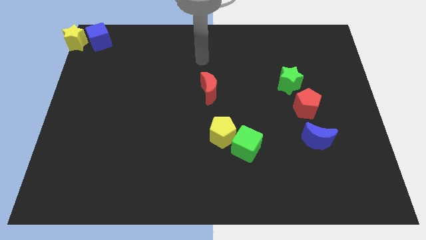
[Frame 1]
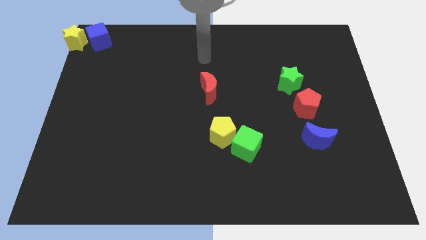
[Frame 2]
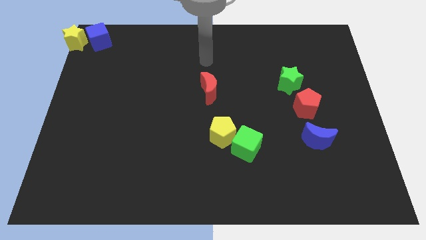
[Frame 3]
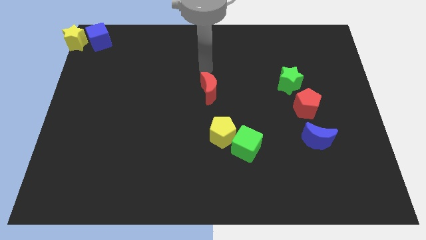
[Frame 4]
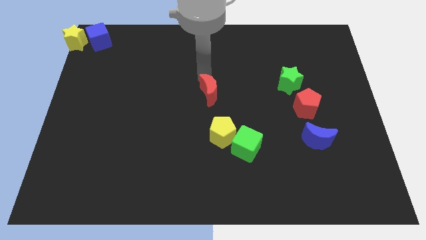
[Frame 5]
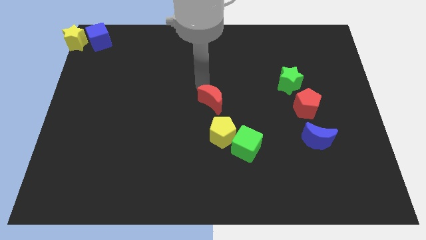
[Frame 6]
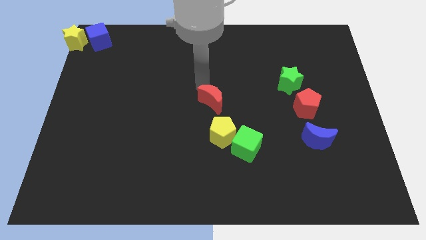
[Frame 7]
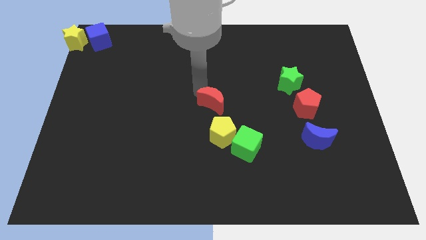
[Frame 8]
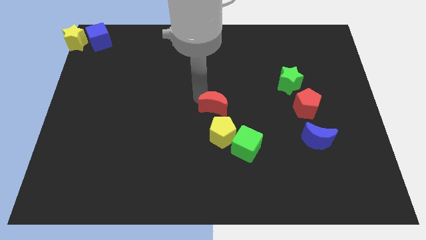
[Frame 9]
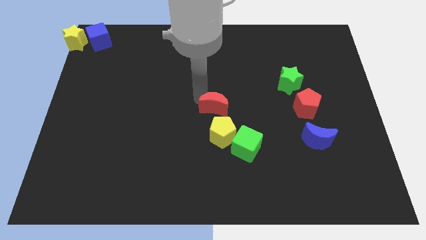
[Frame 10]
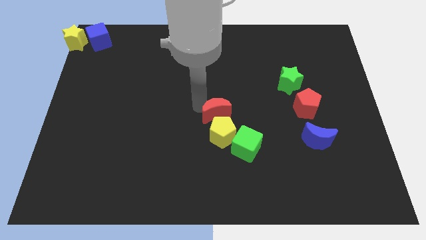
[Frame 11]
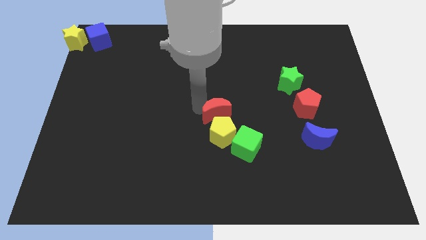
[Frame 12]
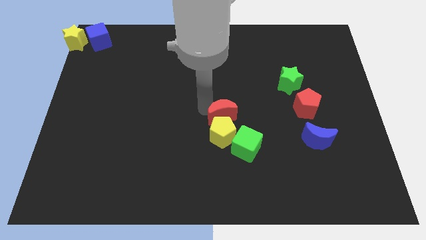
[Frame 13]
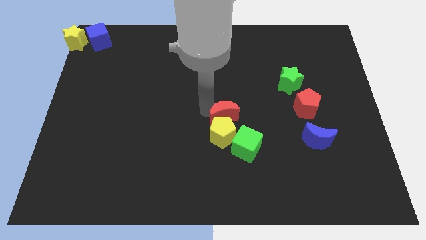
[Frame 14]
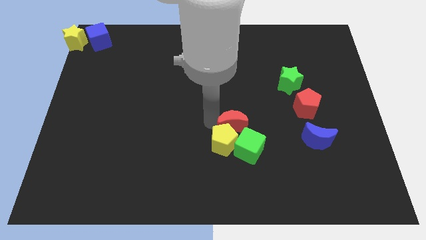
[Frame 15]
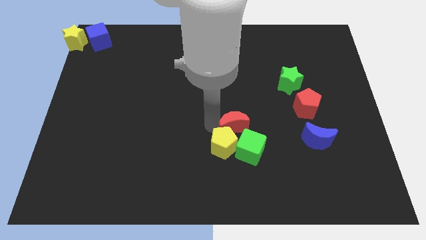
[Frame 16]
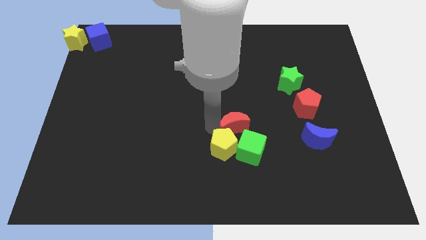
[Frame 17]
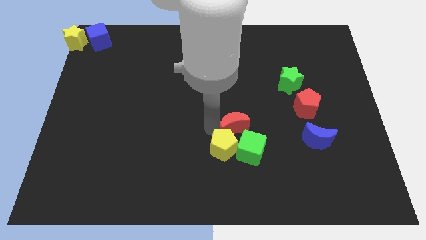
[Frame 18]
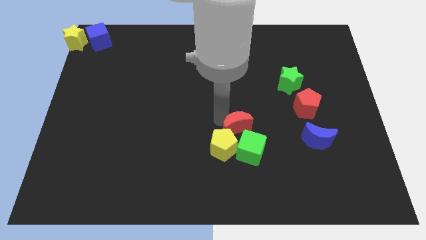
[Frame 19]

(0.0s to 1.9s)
push the red moon into the yellow pentagon

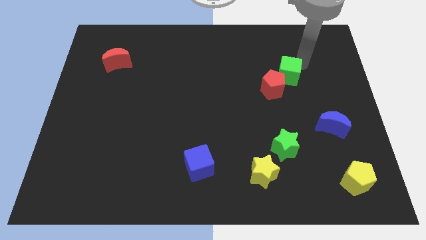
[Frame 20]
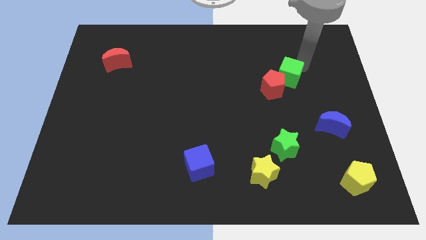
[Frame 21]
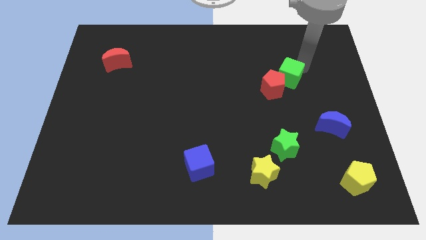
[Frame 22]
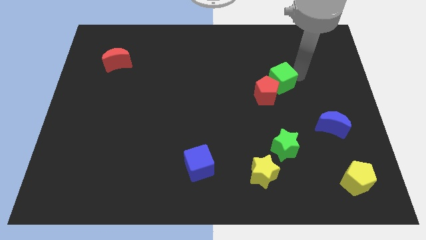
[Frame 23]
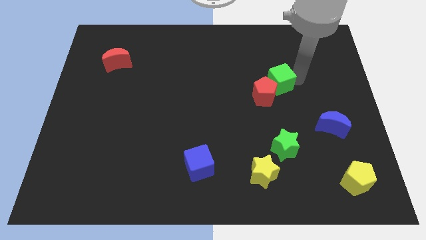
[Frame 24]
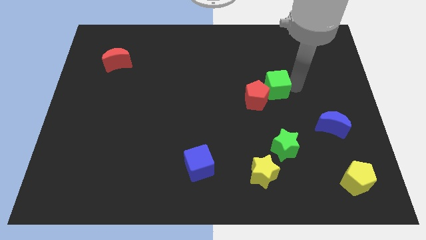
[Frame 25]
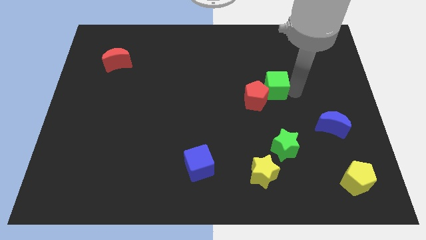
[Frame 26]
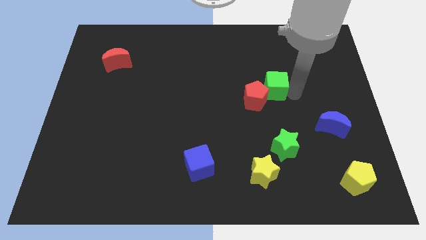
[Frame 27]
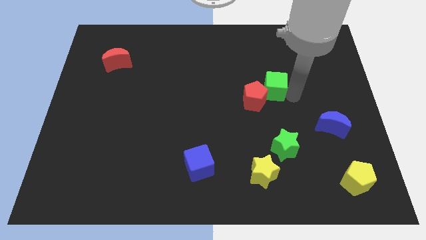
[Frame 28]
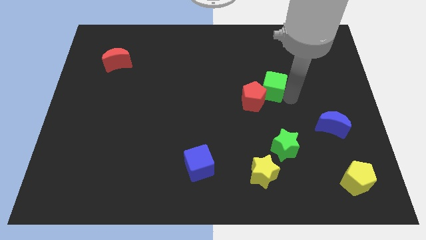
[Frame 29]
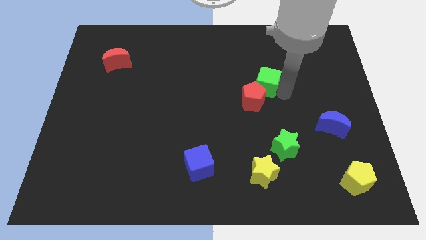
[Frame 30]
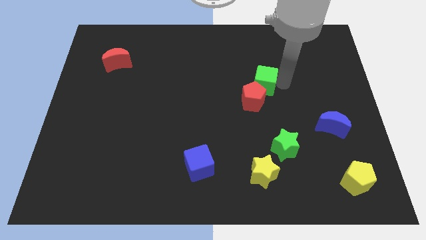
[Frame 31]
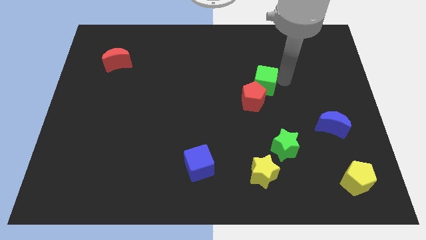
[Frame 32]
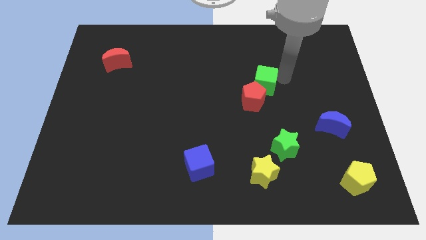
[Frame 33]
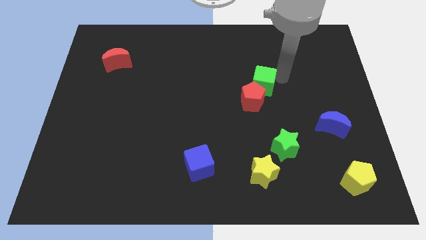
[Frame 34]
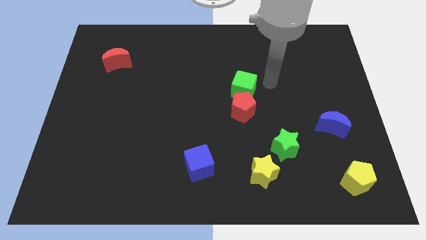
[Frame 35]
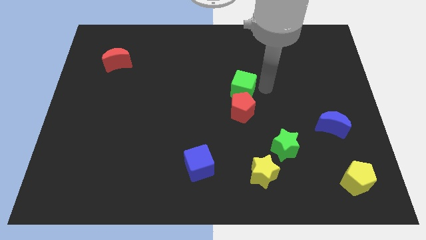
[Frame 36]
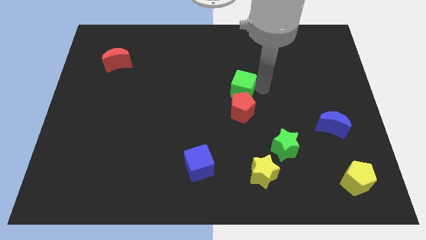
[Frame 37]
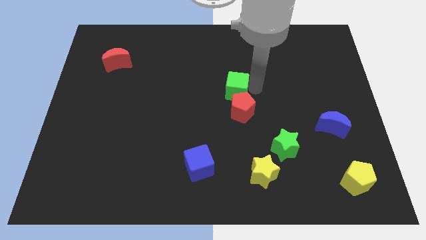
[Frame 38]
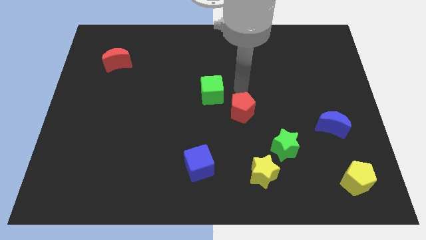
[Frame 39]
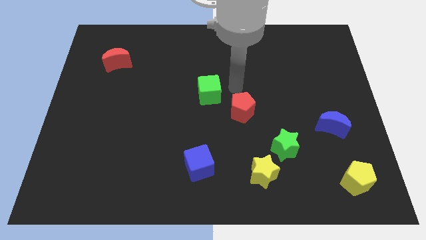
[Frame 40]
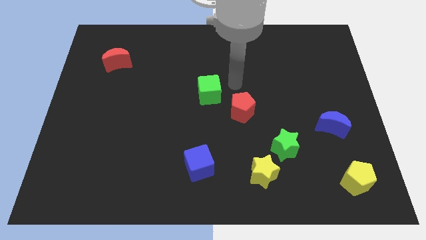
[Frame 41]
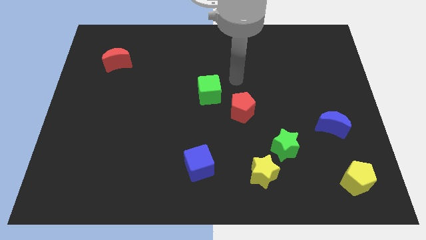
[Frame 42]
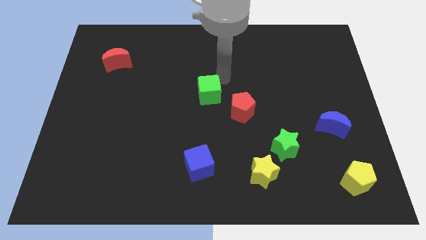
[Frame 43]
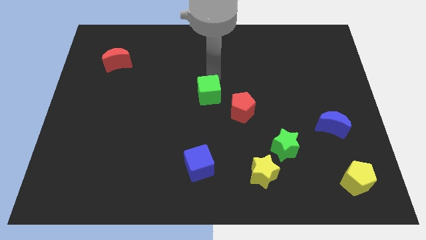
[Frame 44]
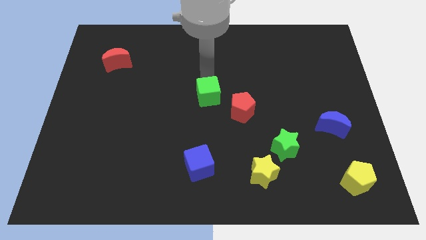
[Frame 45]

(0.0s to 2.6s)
place the green cube beside the red pentagon

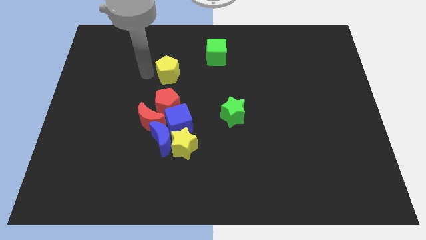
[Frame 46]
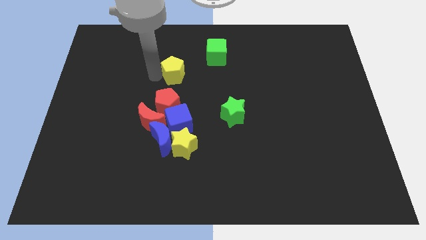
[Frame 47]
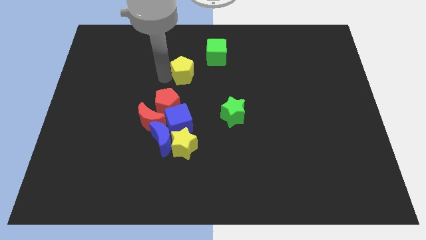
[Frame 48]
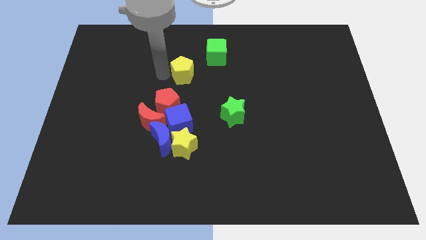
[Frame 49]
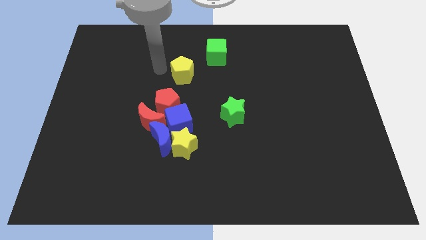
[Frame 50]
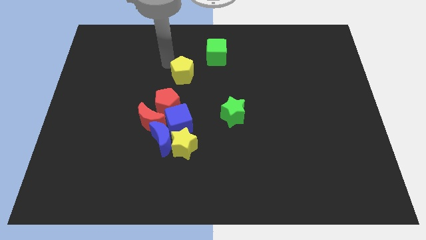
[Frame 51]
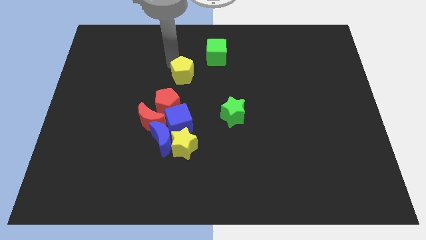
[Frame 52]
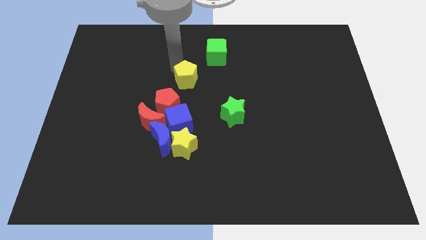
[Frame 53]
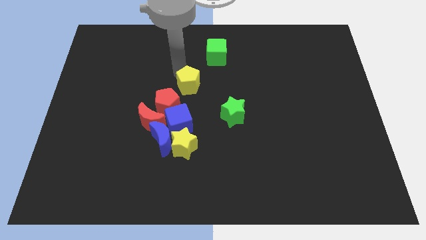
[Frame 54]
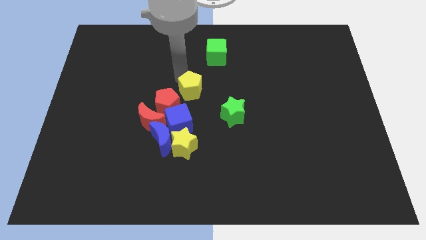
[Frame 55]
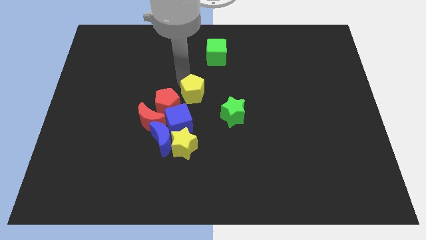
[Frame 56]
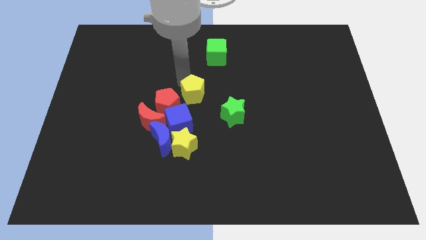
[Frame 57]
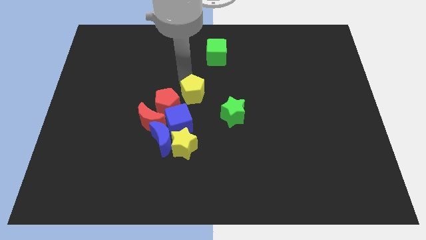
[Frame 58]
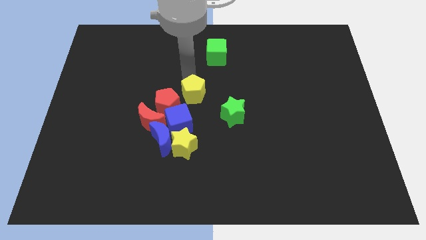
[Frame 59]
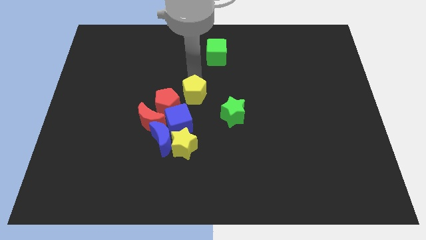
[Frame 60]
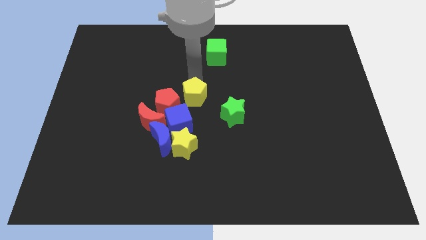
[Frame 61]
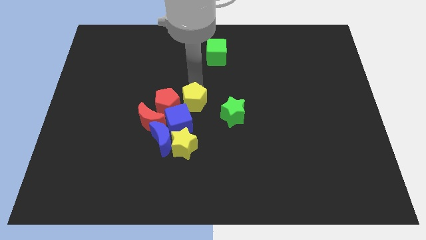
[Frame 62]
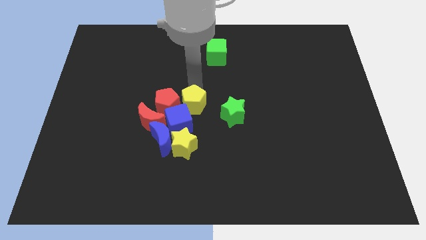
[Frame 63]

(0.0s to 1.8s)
push the yellow pentagon to the right of the red pentagon

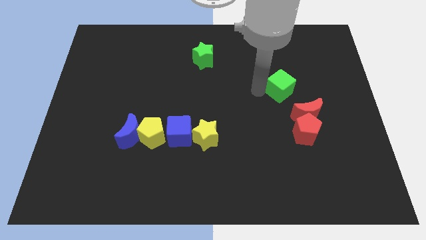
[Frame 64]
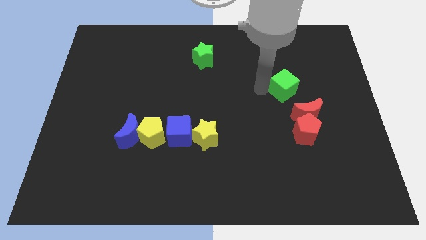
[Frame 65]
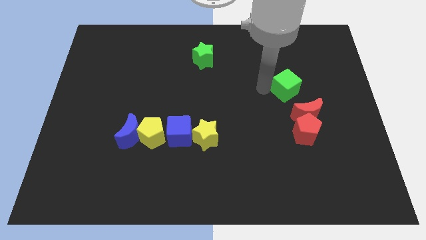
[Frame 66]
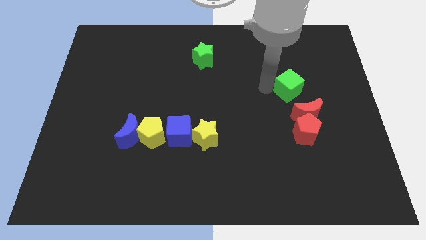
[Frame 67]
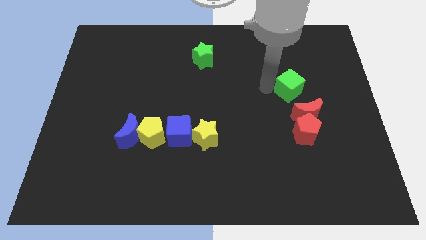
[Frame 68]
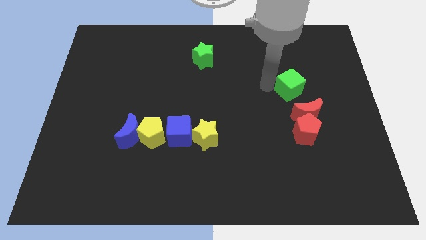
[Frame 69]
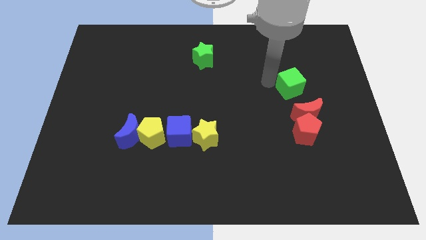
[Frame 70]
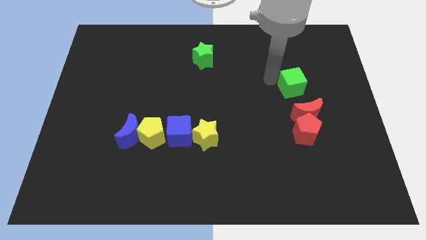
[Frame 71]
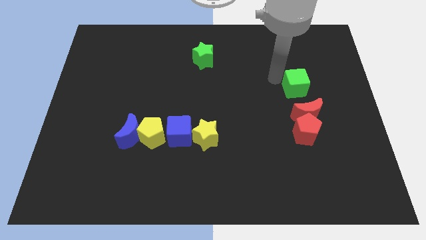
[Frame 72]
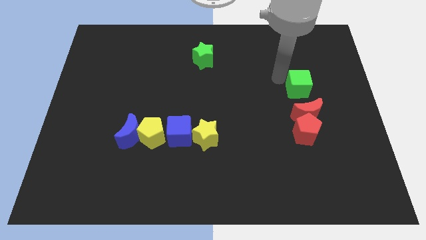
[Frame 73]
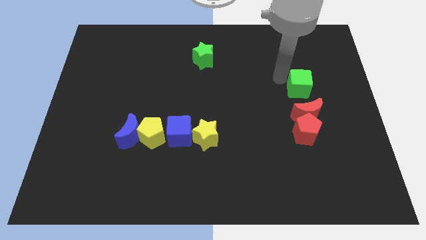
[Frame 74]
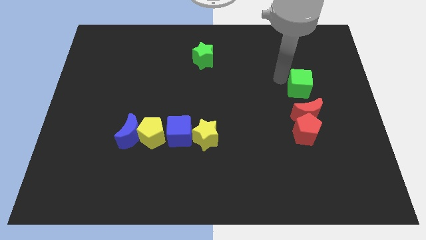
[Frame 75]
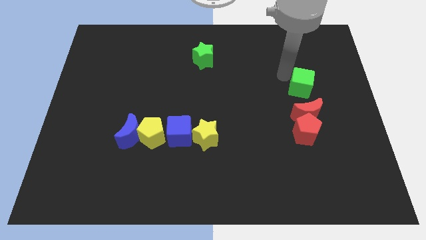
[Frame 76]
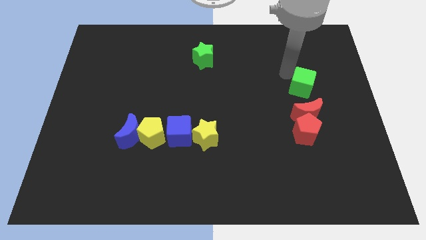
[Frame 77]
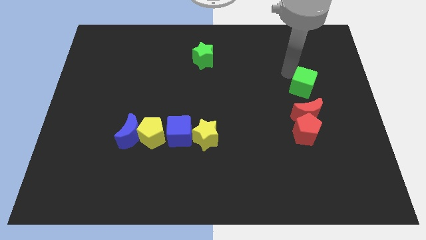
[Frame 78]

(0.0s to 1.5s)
push the green cube vertically to the top of the red crescent

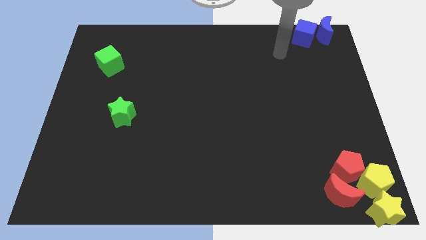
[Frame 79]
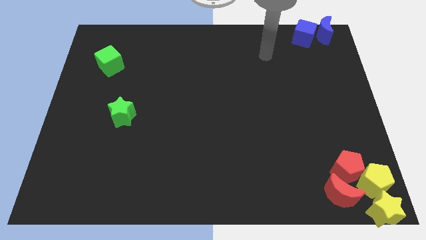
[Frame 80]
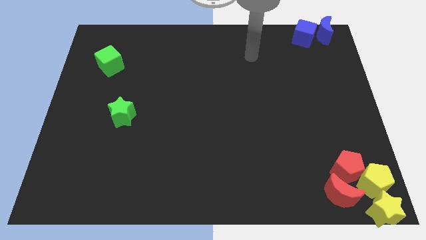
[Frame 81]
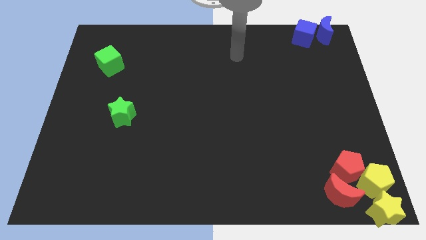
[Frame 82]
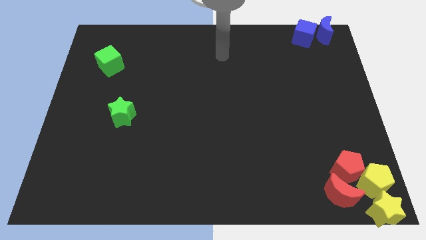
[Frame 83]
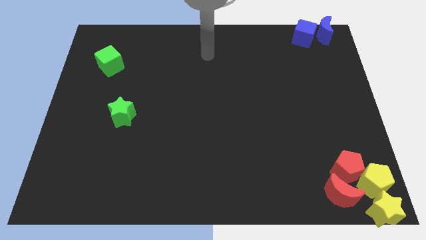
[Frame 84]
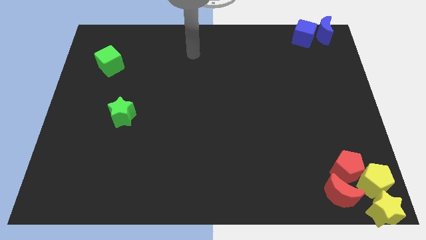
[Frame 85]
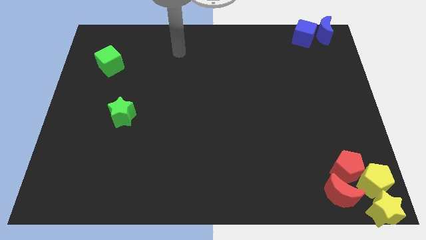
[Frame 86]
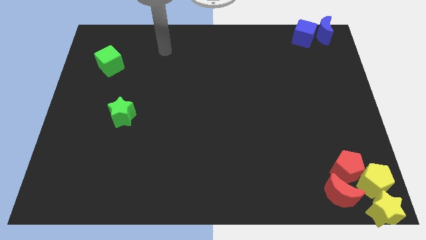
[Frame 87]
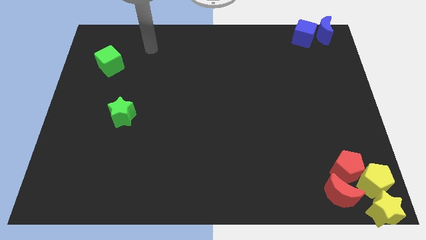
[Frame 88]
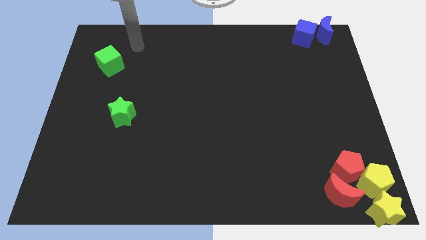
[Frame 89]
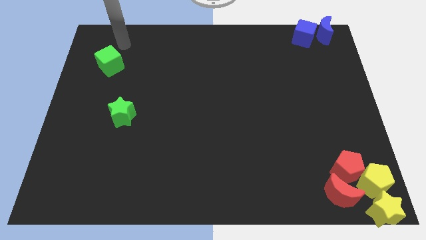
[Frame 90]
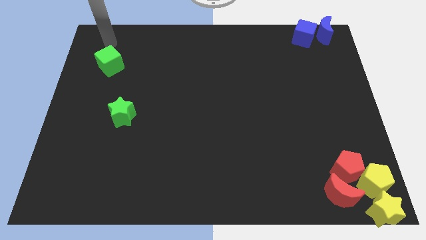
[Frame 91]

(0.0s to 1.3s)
move your arm away from the blue cube
